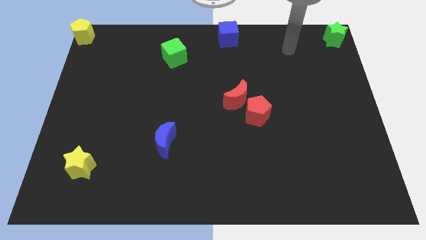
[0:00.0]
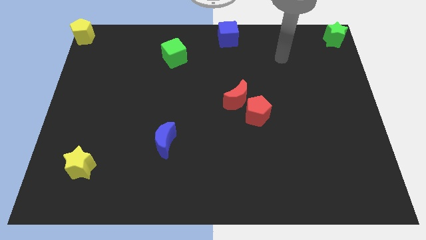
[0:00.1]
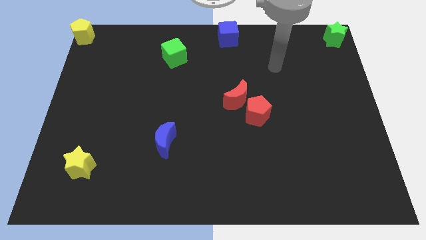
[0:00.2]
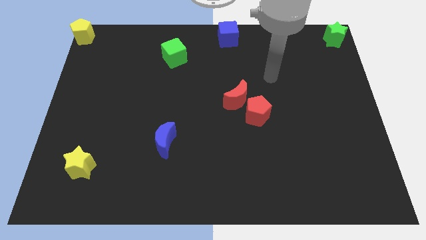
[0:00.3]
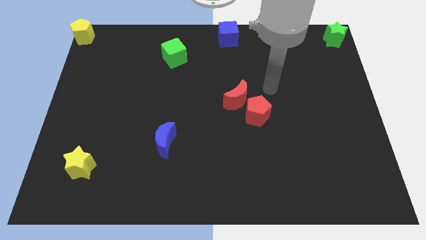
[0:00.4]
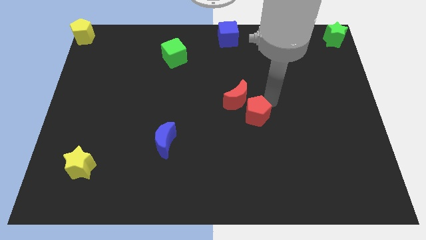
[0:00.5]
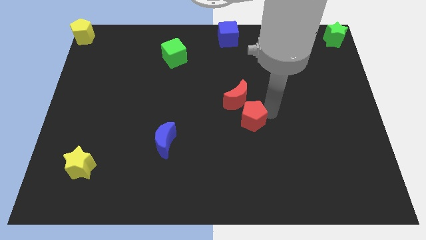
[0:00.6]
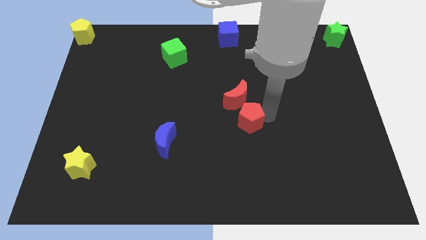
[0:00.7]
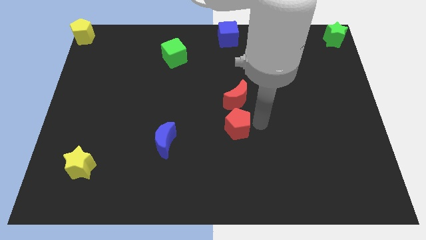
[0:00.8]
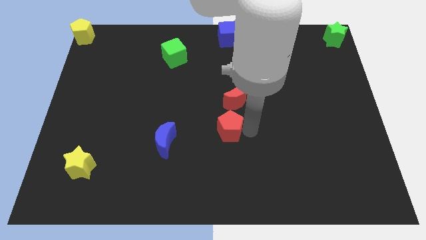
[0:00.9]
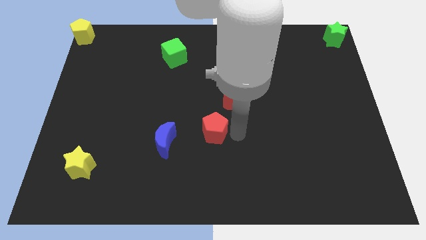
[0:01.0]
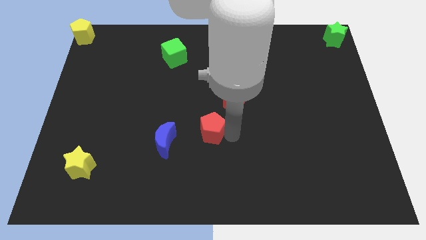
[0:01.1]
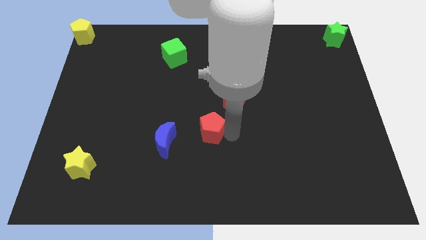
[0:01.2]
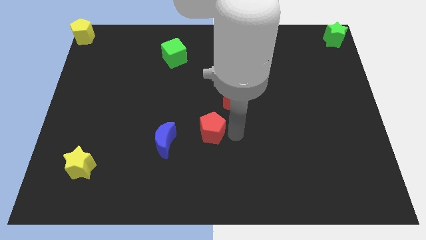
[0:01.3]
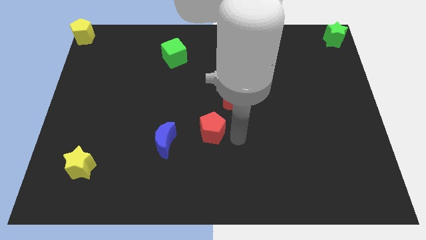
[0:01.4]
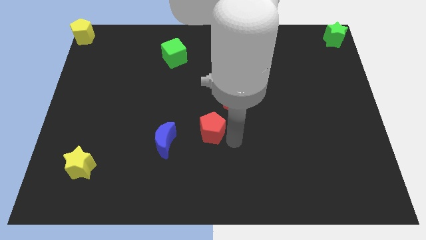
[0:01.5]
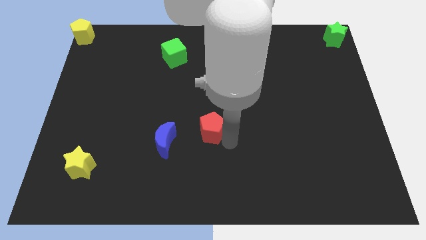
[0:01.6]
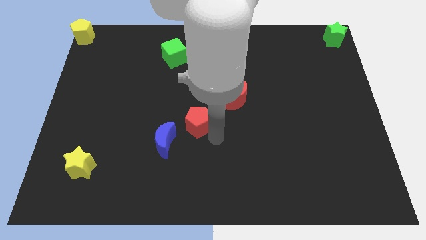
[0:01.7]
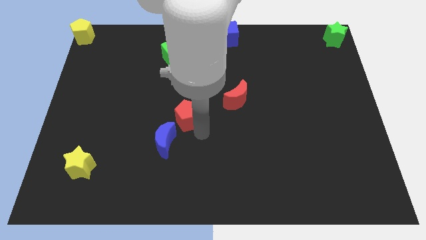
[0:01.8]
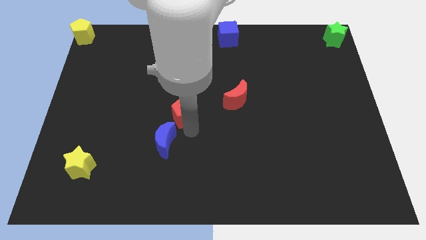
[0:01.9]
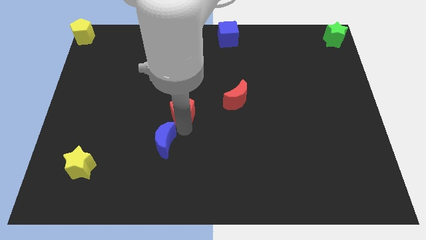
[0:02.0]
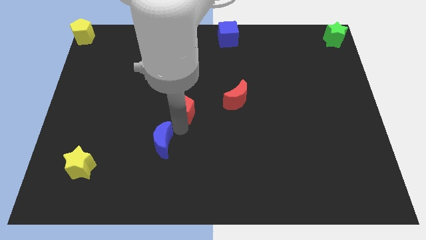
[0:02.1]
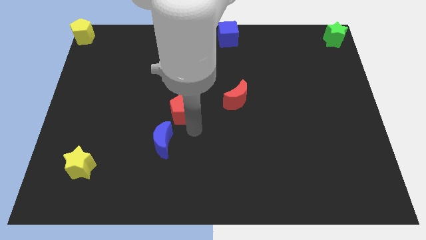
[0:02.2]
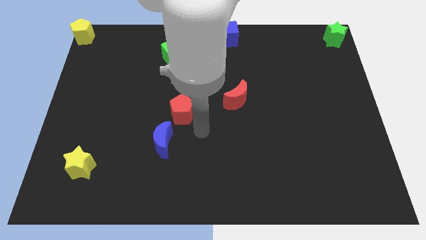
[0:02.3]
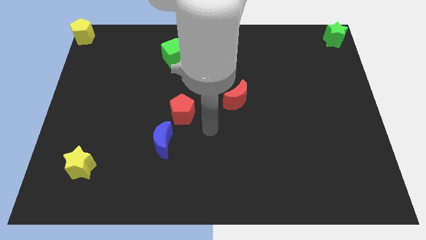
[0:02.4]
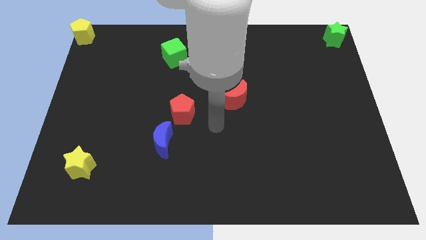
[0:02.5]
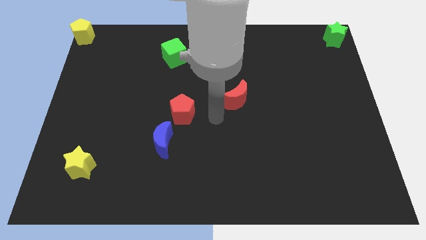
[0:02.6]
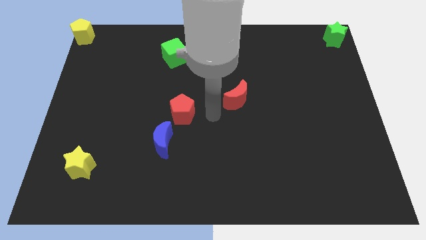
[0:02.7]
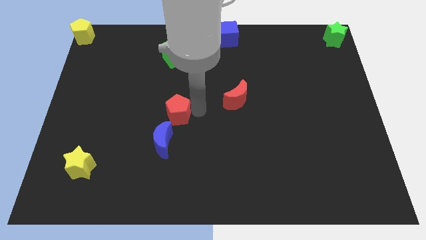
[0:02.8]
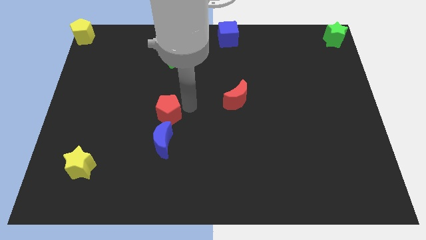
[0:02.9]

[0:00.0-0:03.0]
push red pentagon towards top right to the blue crescent

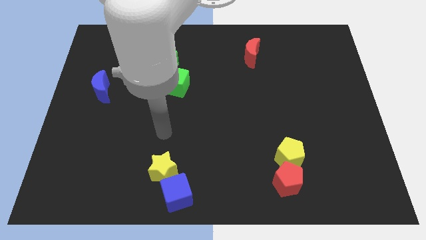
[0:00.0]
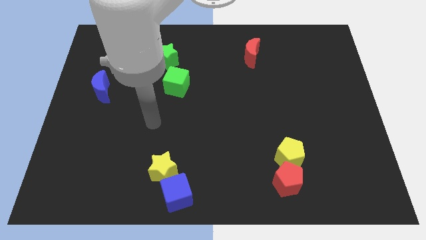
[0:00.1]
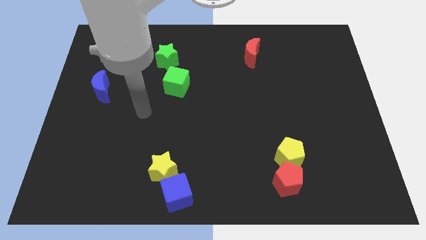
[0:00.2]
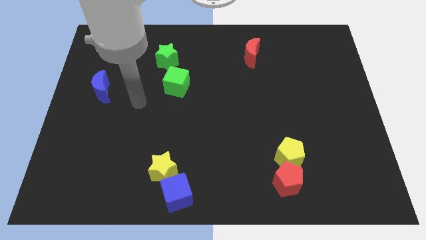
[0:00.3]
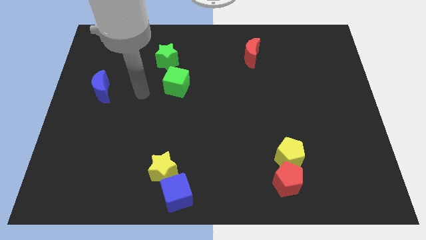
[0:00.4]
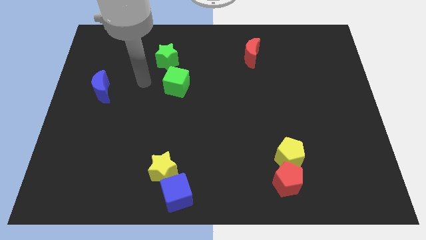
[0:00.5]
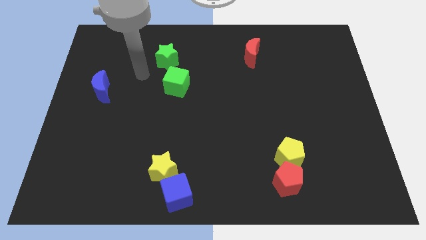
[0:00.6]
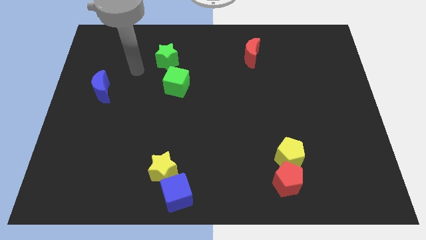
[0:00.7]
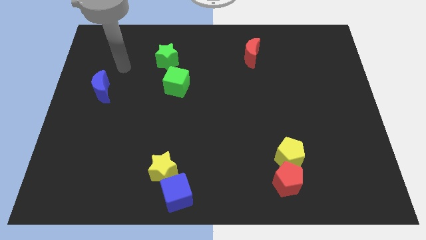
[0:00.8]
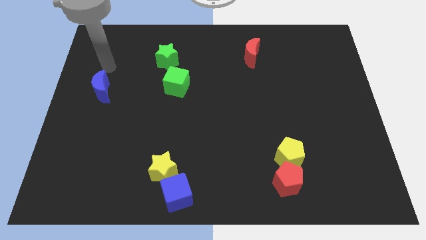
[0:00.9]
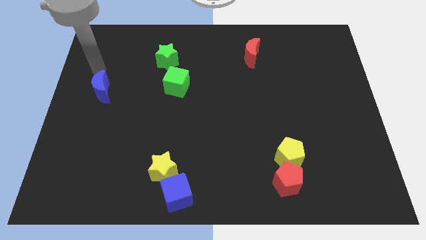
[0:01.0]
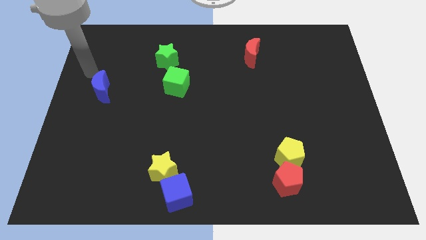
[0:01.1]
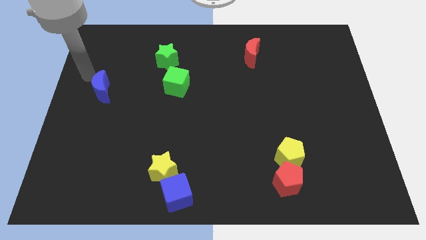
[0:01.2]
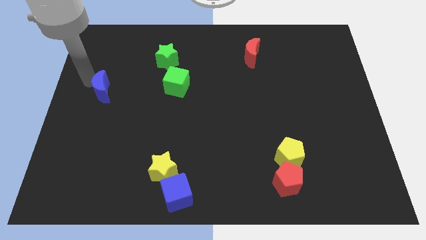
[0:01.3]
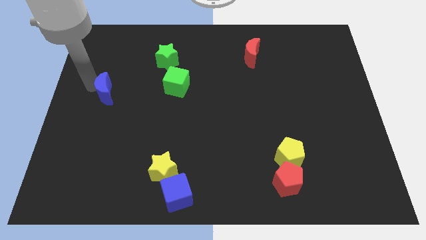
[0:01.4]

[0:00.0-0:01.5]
tap the blue crescent

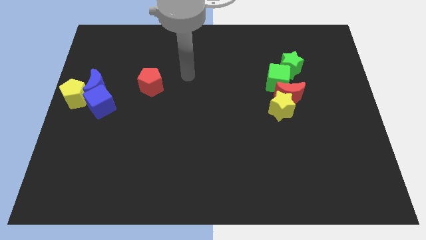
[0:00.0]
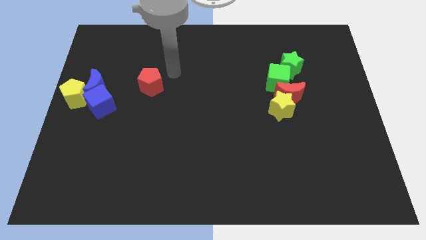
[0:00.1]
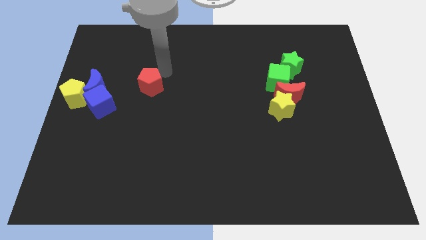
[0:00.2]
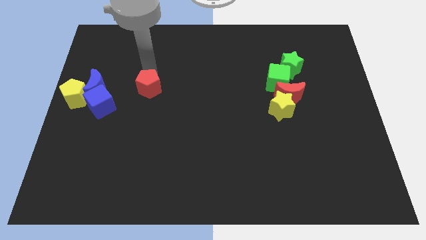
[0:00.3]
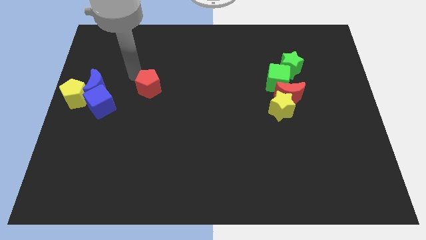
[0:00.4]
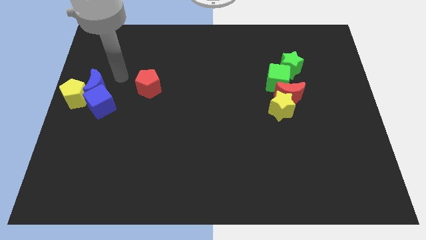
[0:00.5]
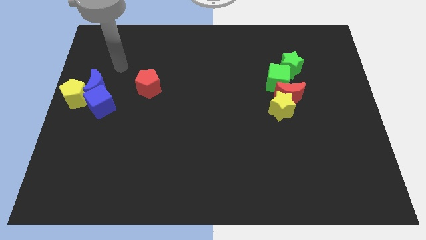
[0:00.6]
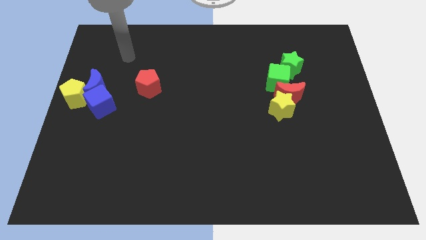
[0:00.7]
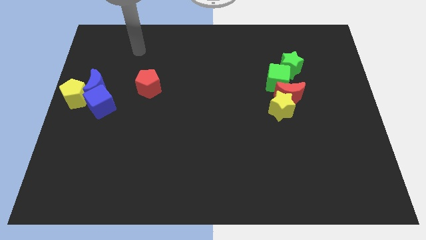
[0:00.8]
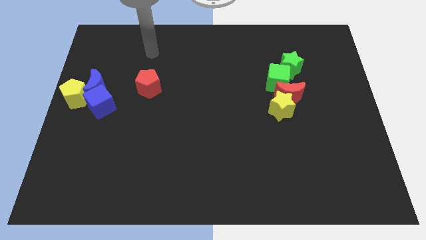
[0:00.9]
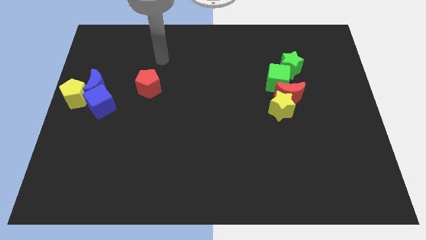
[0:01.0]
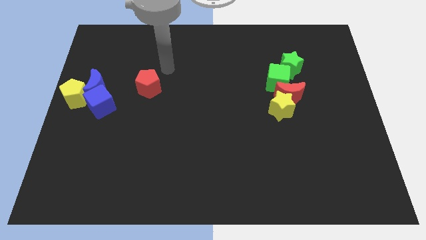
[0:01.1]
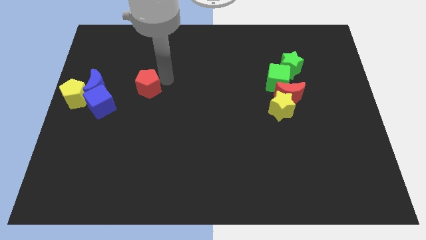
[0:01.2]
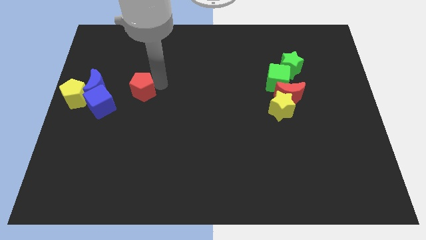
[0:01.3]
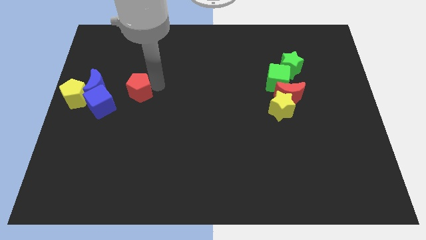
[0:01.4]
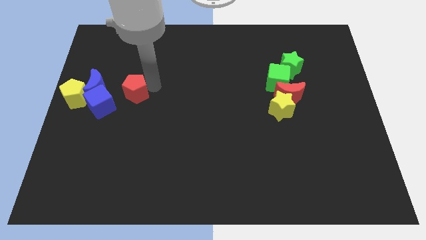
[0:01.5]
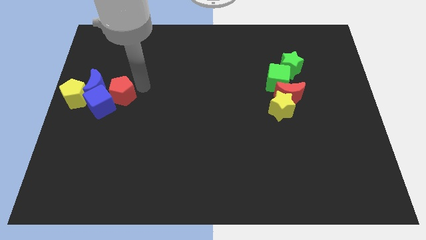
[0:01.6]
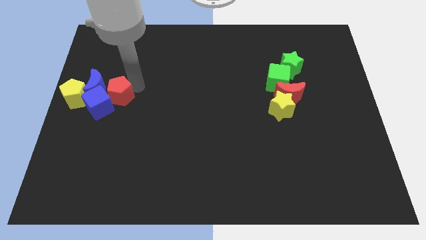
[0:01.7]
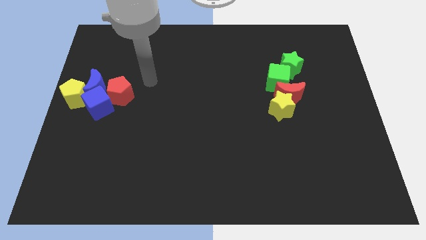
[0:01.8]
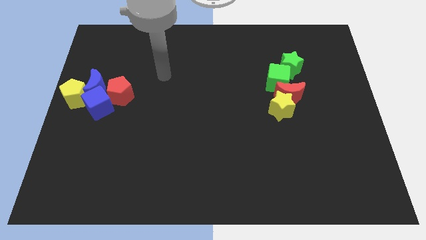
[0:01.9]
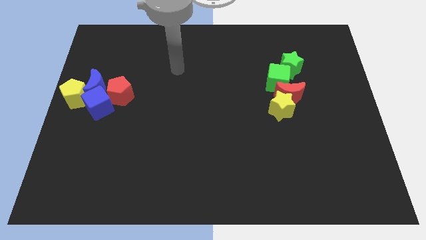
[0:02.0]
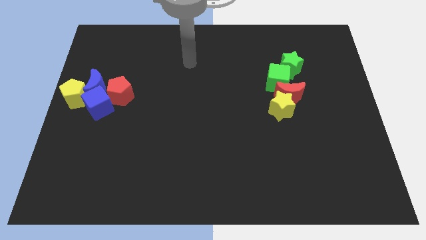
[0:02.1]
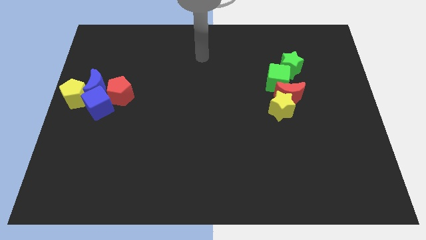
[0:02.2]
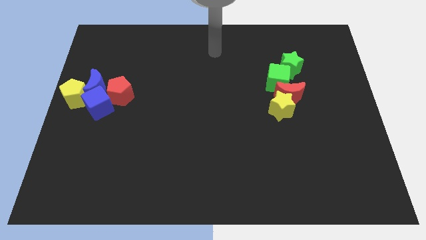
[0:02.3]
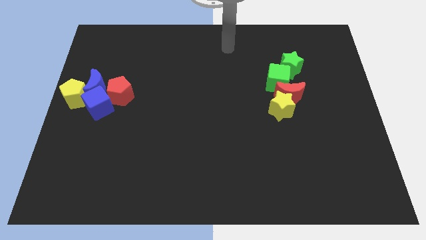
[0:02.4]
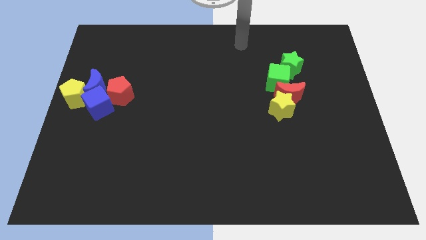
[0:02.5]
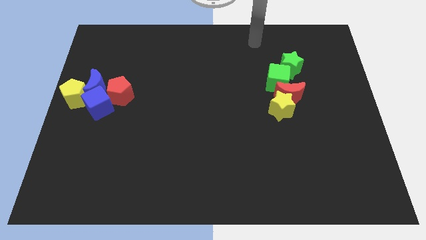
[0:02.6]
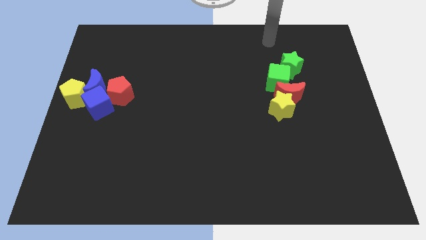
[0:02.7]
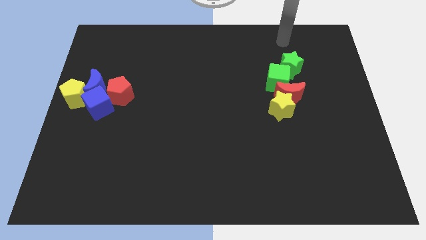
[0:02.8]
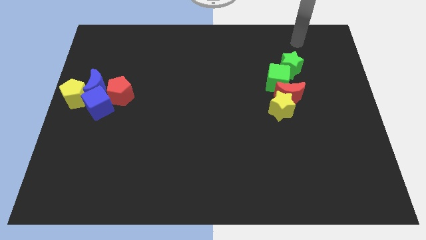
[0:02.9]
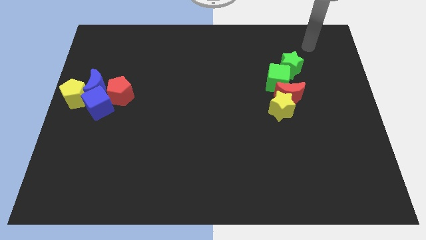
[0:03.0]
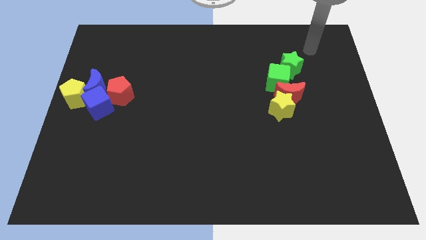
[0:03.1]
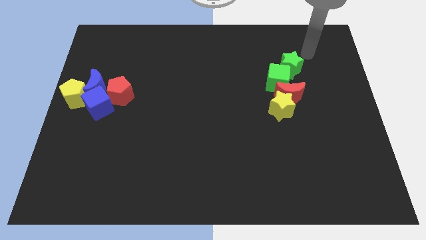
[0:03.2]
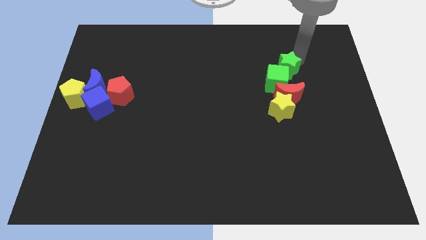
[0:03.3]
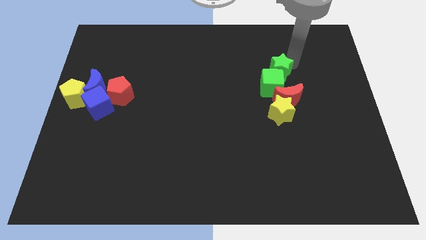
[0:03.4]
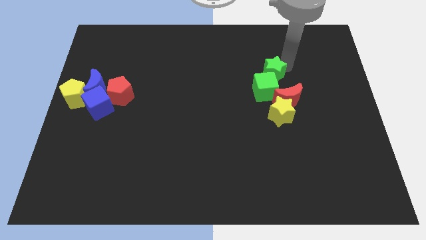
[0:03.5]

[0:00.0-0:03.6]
place the red pentagon towards the top right side of the blue cube

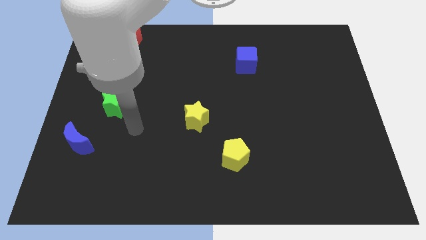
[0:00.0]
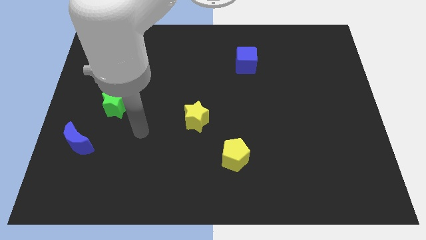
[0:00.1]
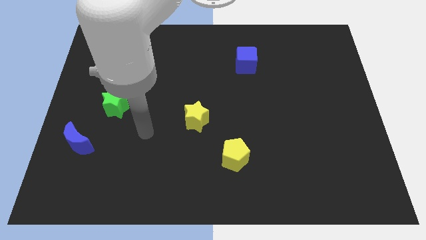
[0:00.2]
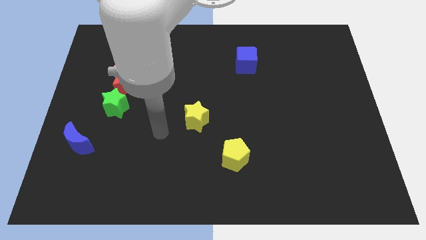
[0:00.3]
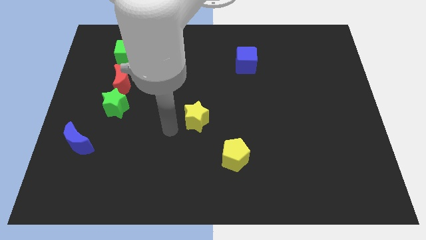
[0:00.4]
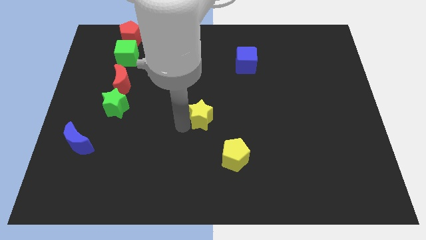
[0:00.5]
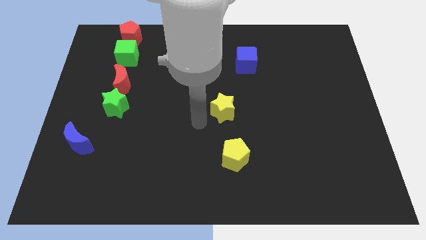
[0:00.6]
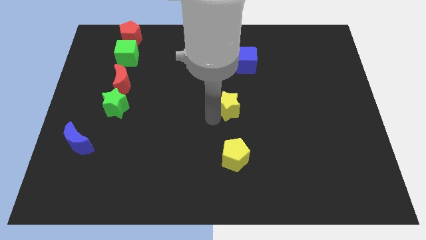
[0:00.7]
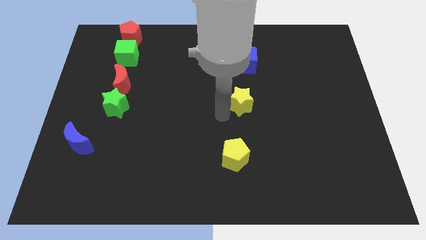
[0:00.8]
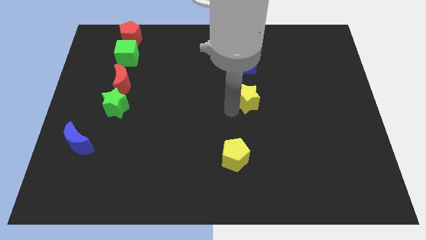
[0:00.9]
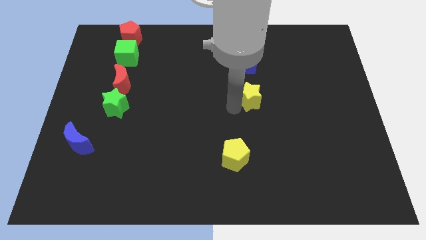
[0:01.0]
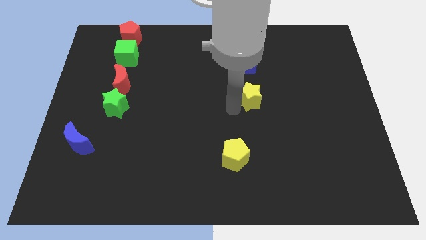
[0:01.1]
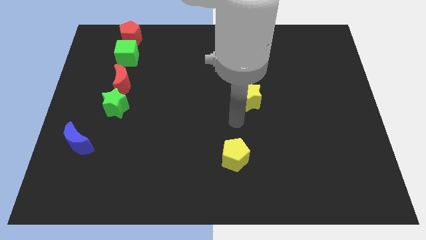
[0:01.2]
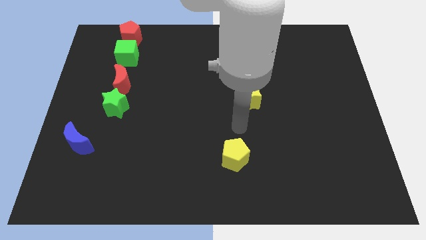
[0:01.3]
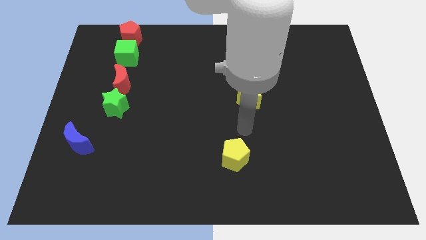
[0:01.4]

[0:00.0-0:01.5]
move the yellow star below the blue cube
